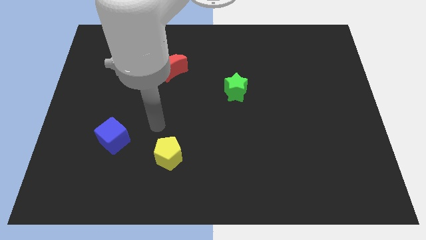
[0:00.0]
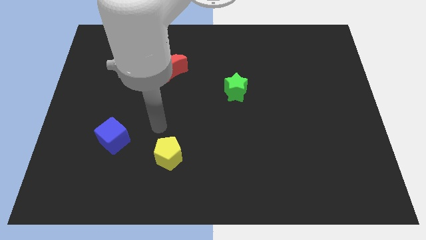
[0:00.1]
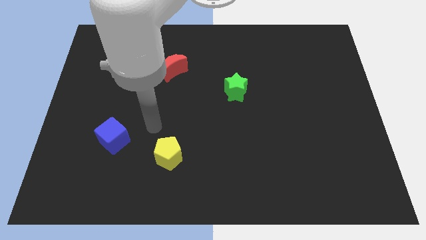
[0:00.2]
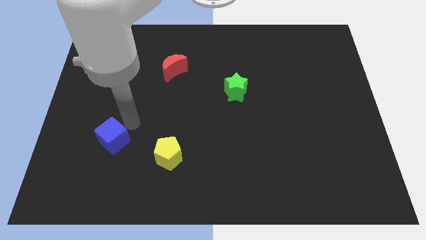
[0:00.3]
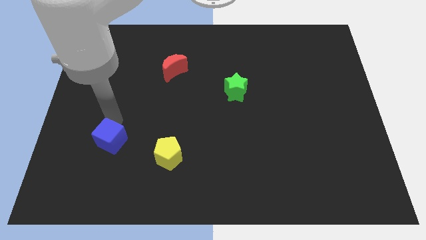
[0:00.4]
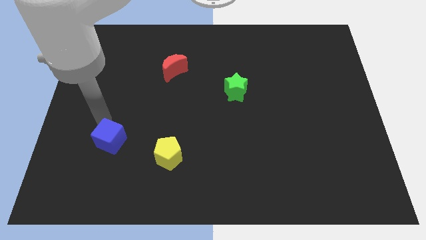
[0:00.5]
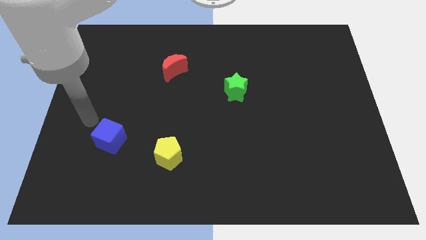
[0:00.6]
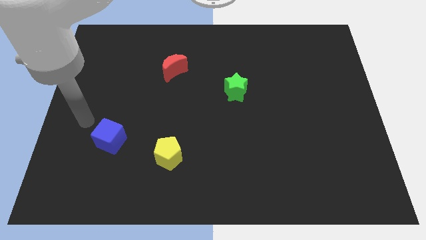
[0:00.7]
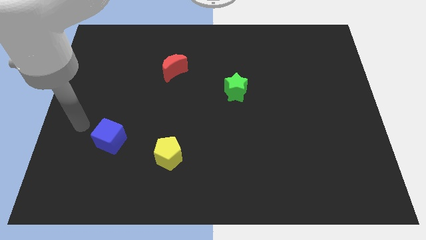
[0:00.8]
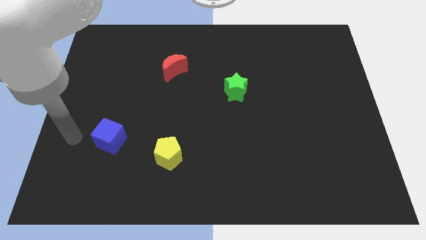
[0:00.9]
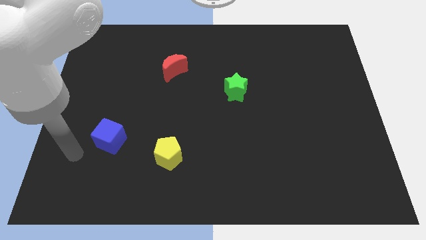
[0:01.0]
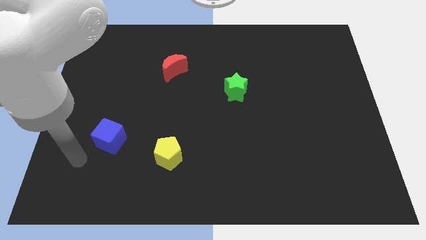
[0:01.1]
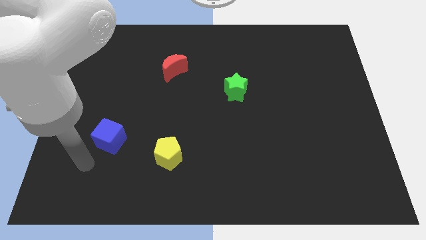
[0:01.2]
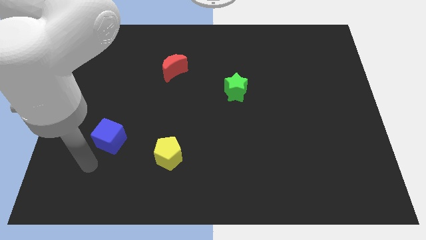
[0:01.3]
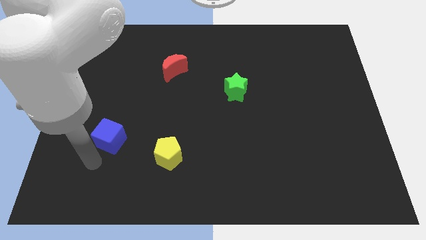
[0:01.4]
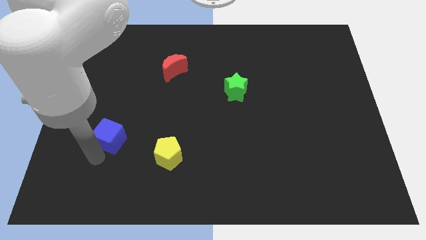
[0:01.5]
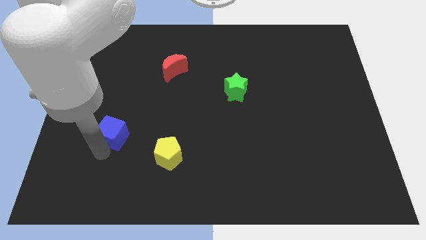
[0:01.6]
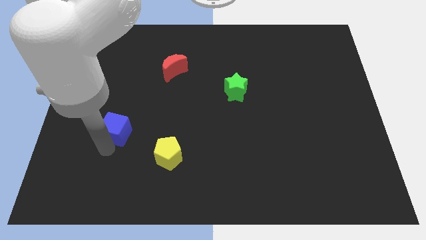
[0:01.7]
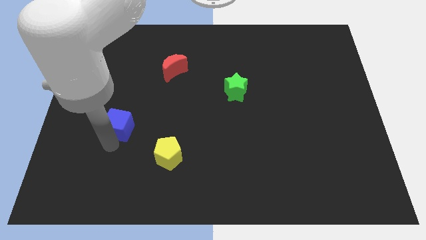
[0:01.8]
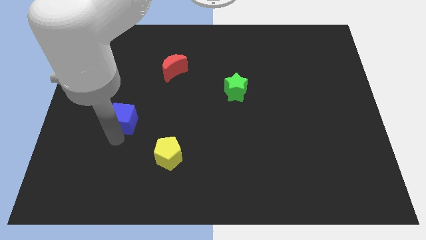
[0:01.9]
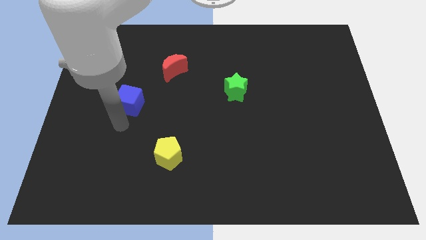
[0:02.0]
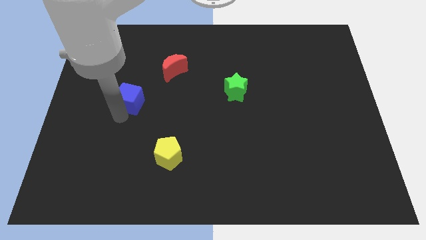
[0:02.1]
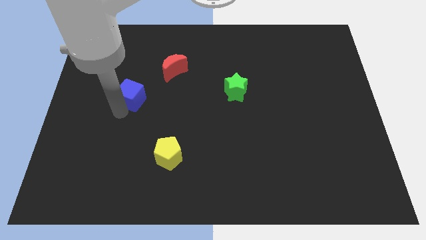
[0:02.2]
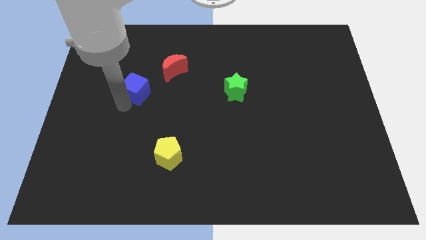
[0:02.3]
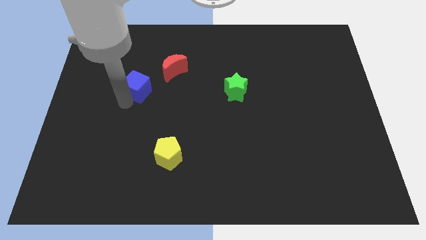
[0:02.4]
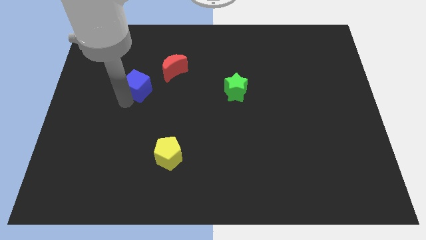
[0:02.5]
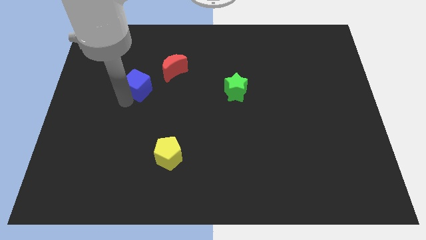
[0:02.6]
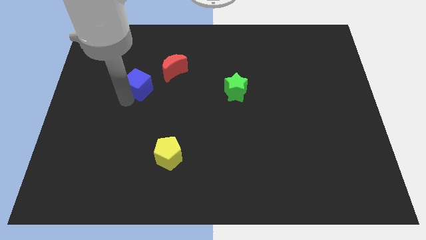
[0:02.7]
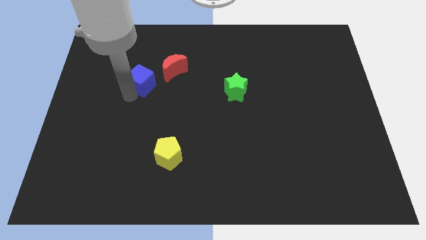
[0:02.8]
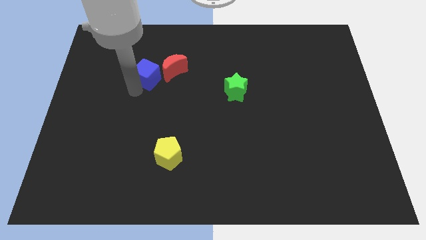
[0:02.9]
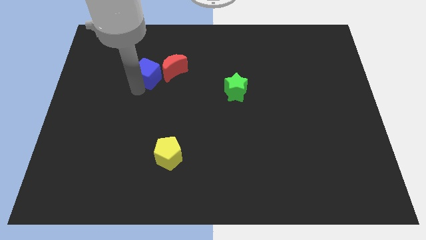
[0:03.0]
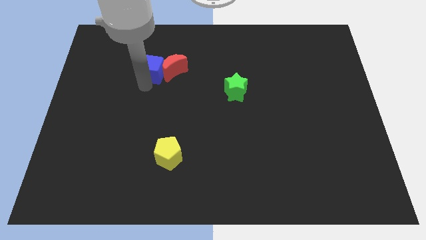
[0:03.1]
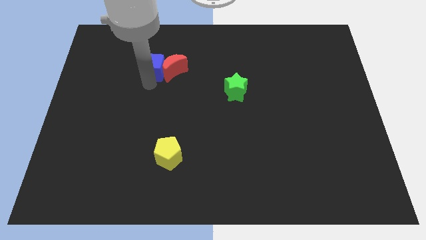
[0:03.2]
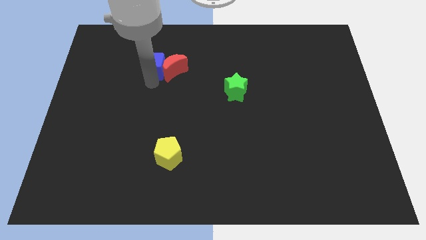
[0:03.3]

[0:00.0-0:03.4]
put the blue cube close to the red moon

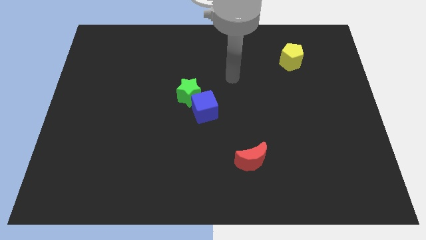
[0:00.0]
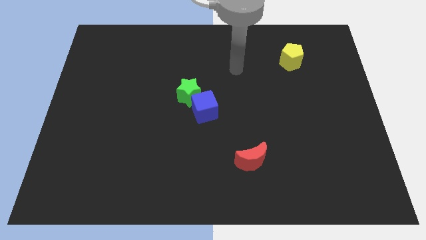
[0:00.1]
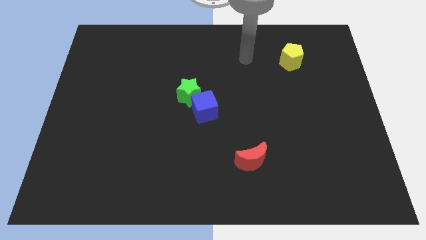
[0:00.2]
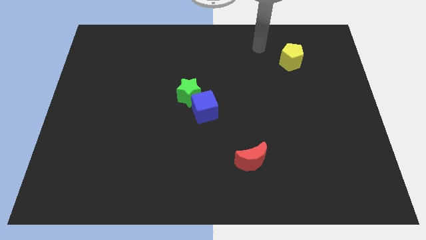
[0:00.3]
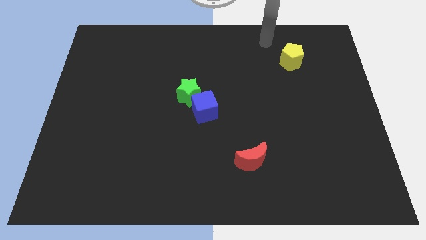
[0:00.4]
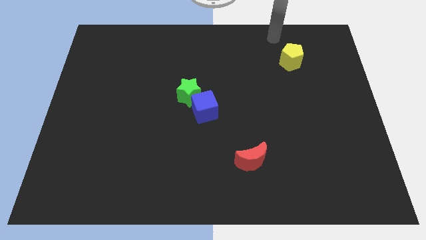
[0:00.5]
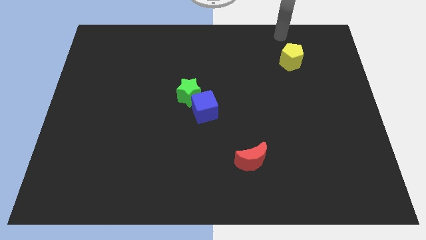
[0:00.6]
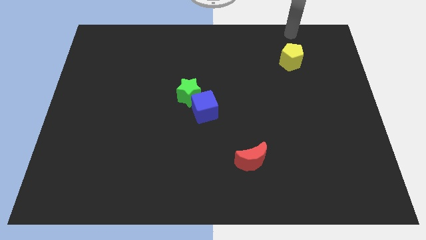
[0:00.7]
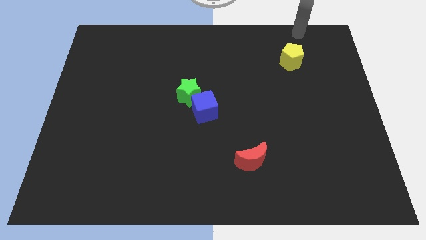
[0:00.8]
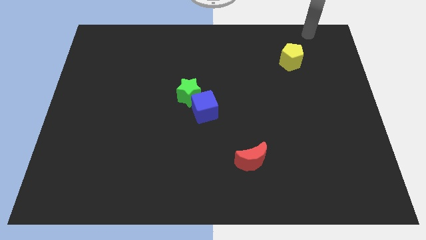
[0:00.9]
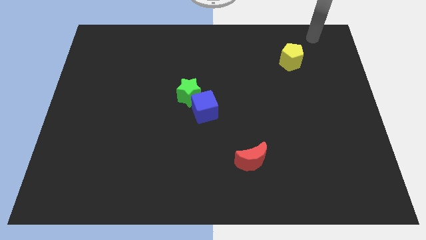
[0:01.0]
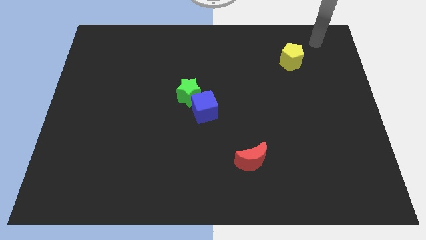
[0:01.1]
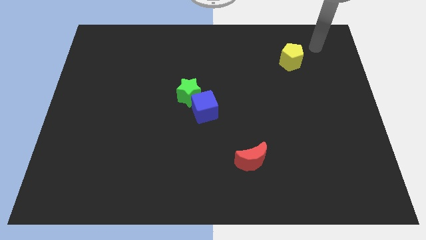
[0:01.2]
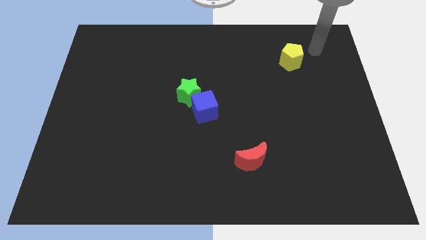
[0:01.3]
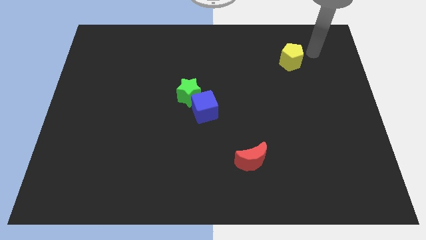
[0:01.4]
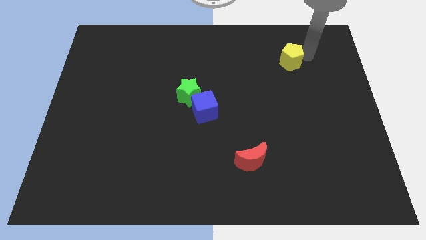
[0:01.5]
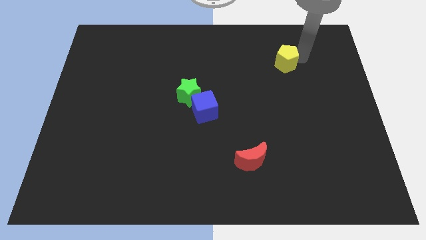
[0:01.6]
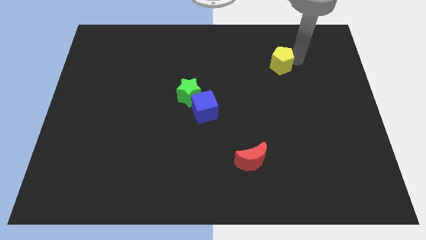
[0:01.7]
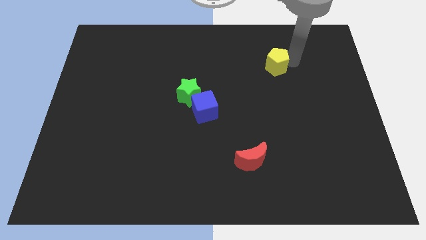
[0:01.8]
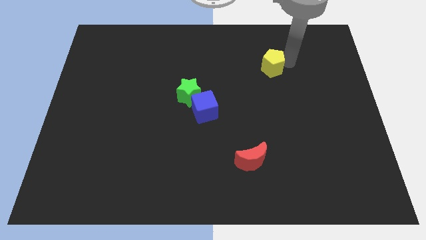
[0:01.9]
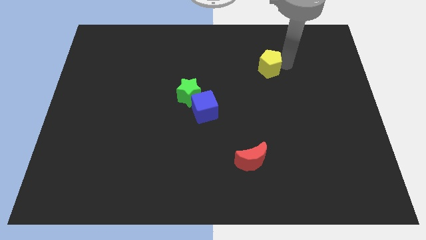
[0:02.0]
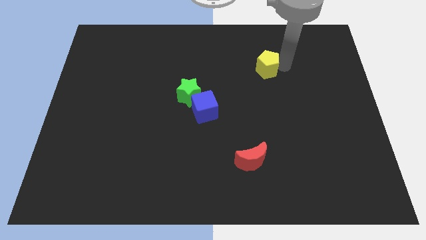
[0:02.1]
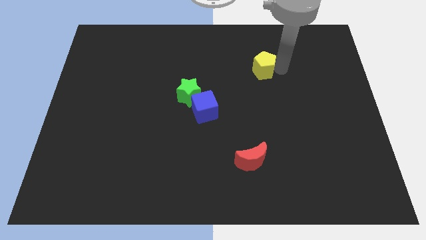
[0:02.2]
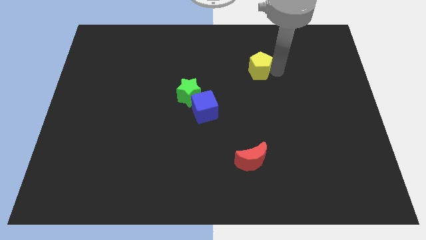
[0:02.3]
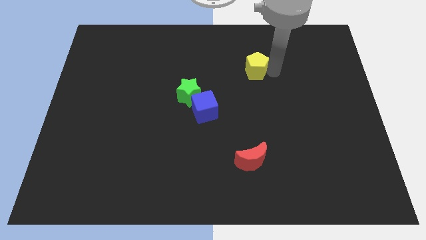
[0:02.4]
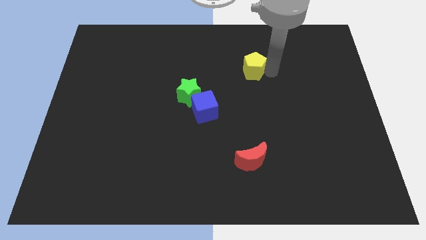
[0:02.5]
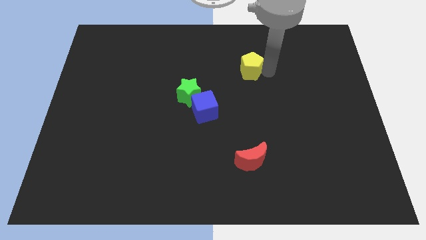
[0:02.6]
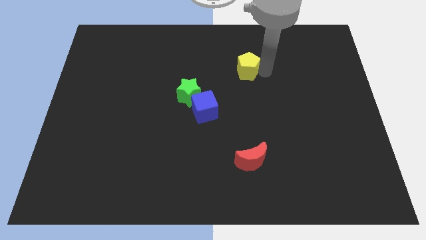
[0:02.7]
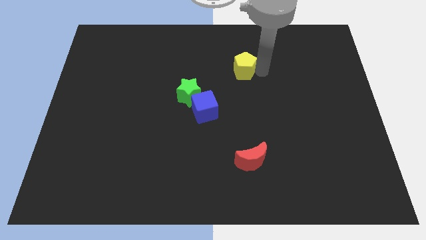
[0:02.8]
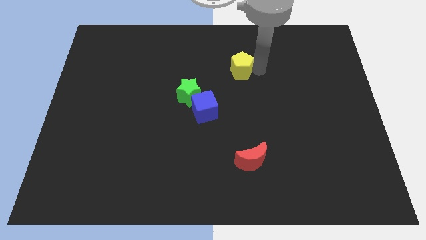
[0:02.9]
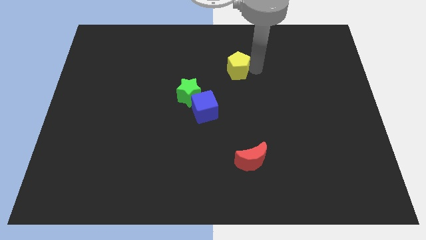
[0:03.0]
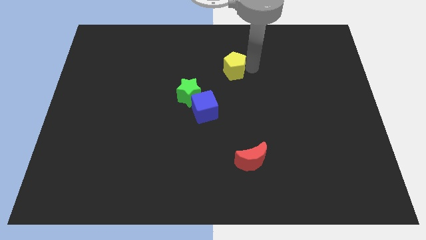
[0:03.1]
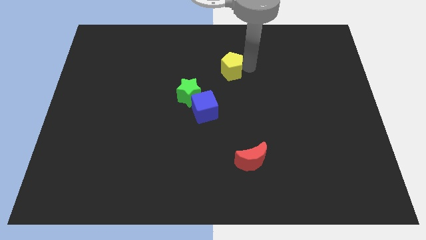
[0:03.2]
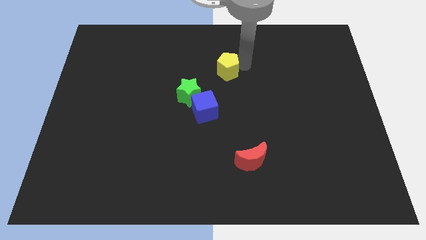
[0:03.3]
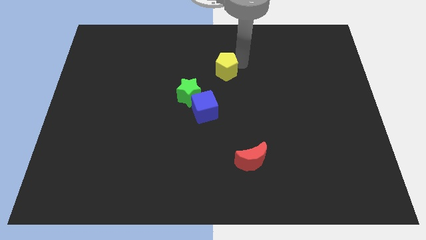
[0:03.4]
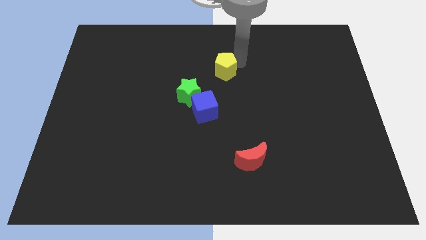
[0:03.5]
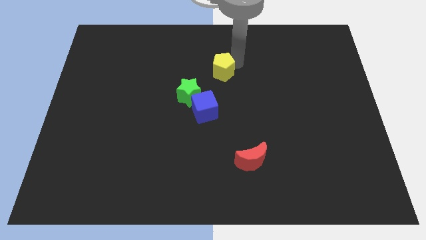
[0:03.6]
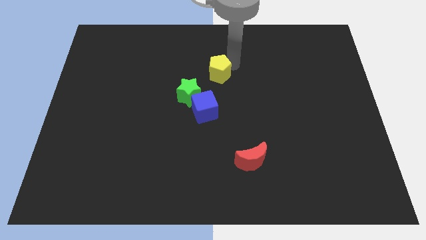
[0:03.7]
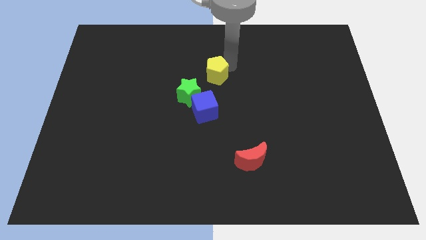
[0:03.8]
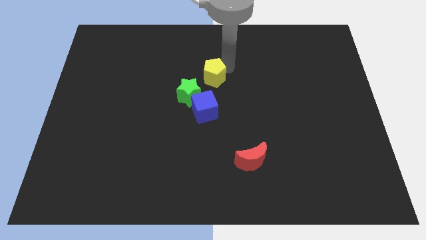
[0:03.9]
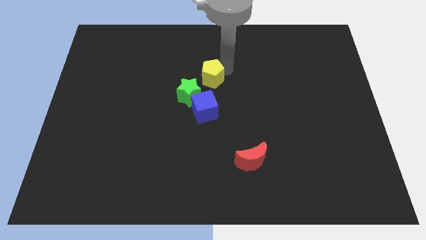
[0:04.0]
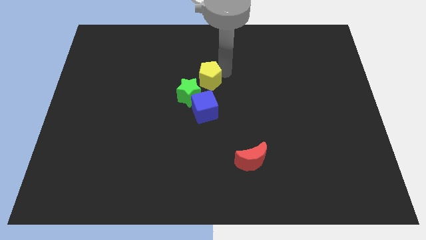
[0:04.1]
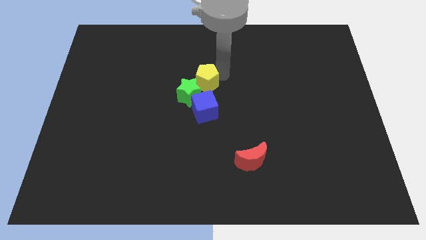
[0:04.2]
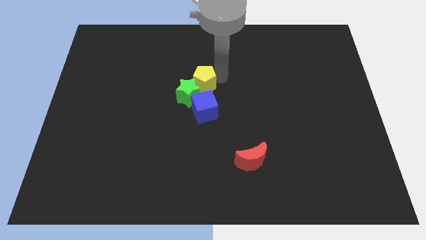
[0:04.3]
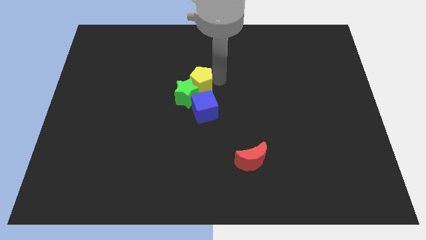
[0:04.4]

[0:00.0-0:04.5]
push the pentagon next to the star

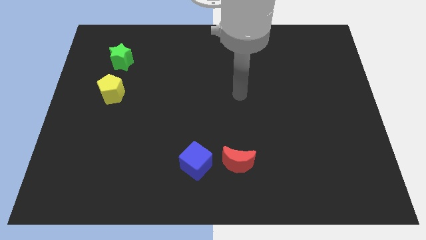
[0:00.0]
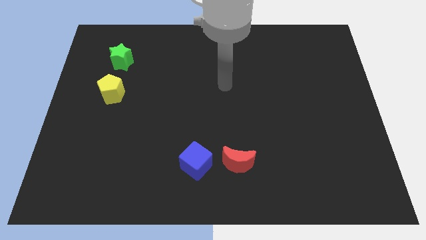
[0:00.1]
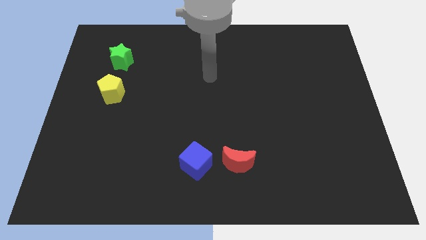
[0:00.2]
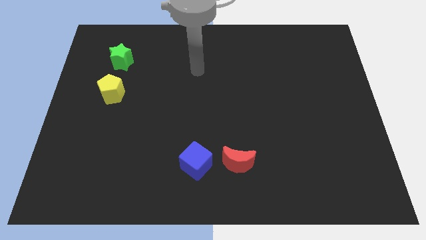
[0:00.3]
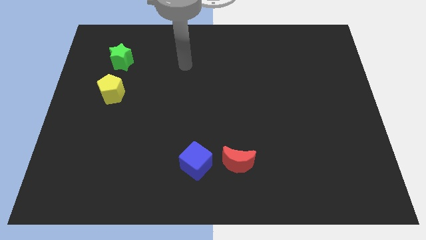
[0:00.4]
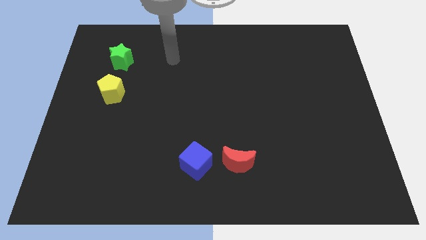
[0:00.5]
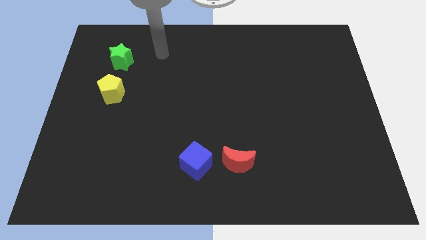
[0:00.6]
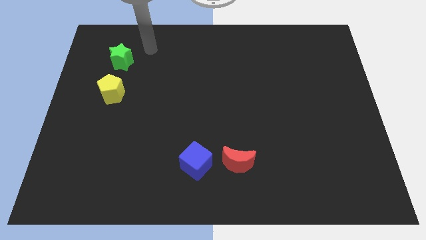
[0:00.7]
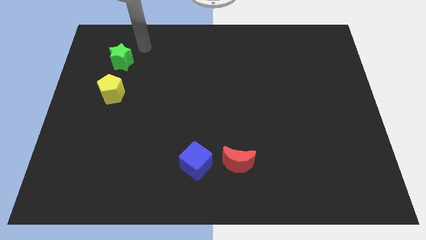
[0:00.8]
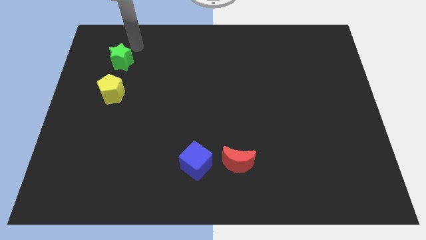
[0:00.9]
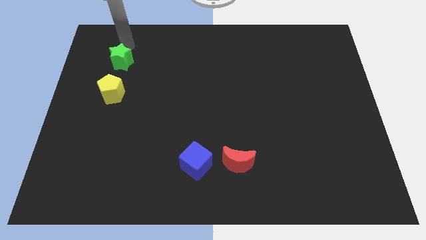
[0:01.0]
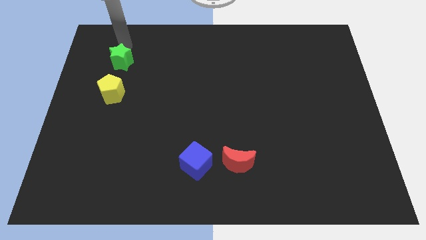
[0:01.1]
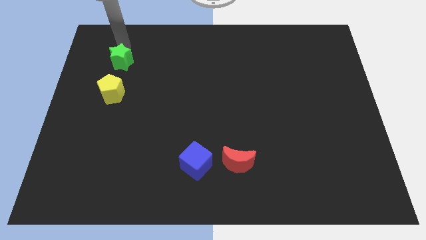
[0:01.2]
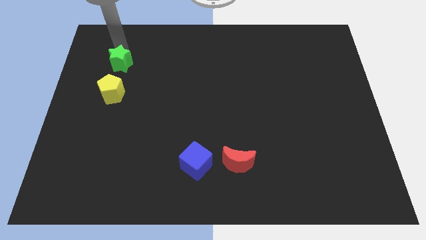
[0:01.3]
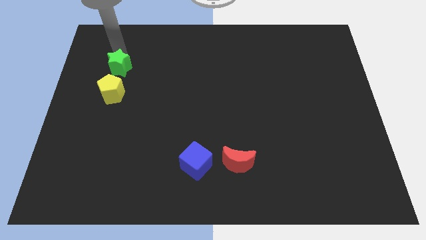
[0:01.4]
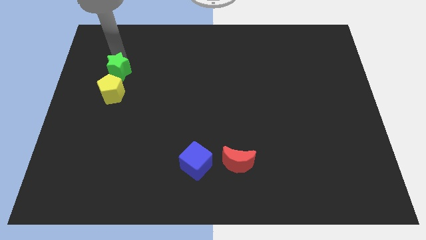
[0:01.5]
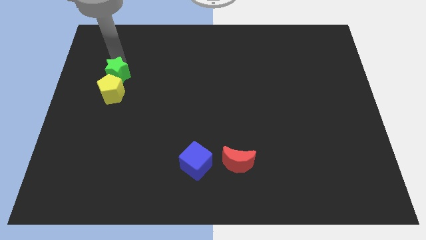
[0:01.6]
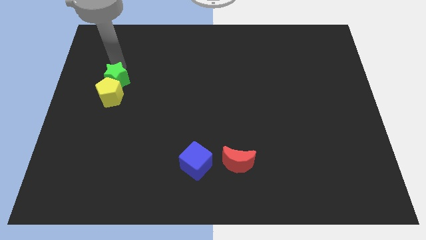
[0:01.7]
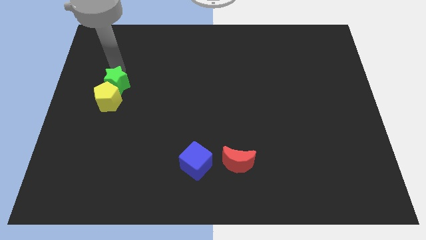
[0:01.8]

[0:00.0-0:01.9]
put the star to the yellow block
